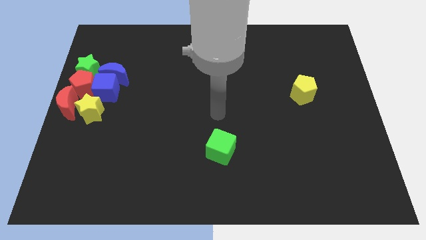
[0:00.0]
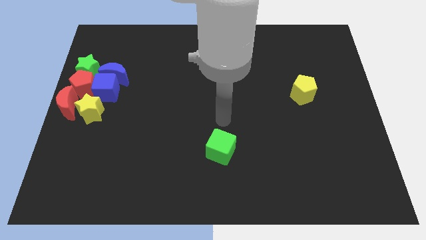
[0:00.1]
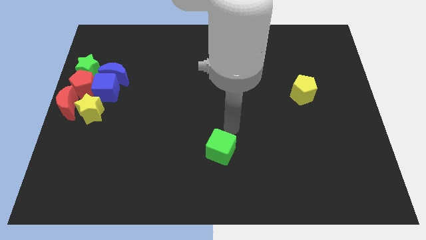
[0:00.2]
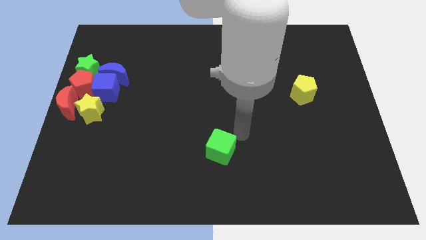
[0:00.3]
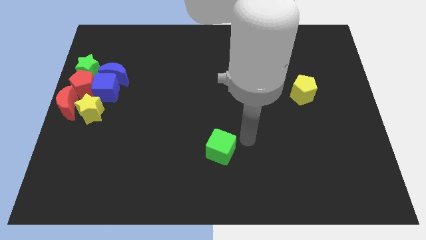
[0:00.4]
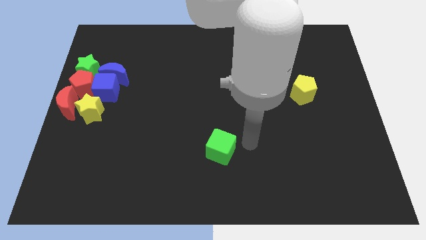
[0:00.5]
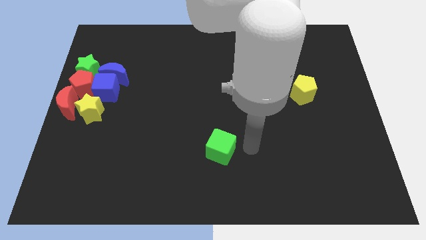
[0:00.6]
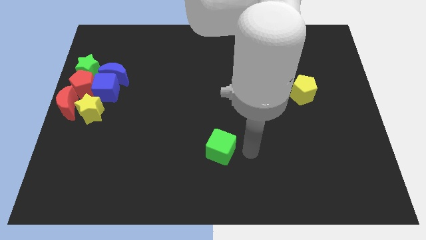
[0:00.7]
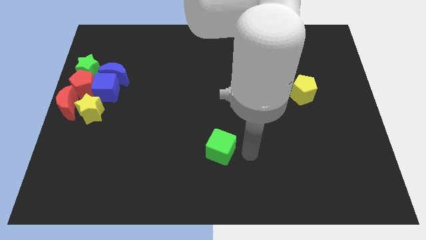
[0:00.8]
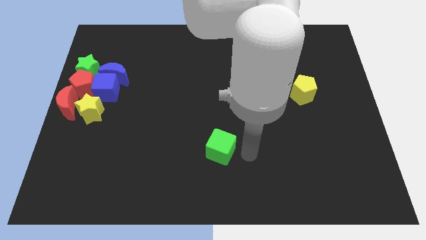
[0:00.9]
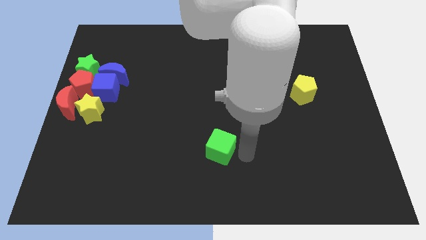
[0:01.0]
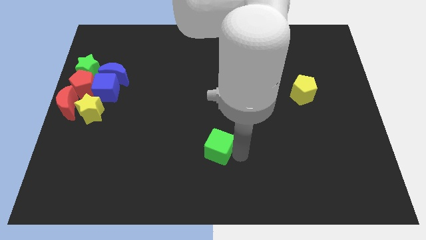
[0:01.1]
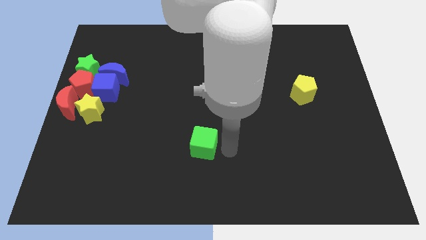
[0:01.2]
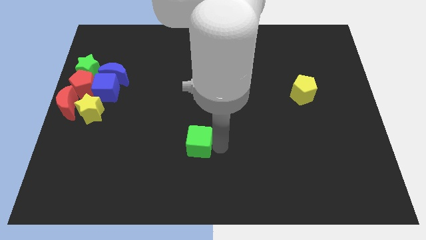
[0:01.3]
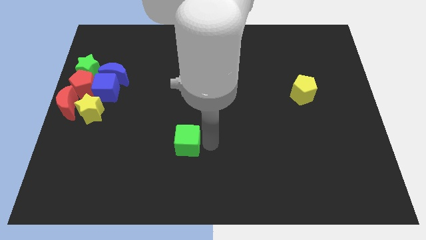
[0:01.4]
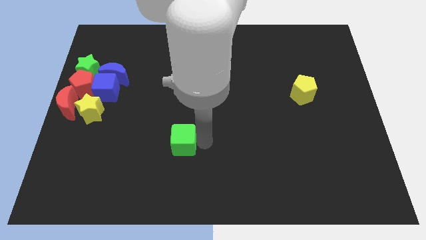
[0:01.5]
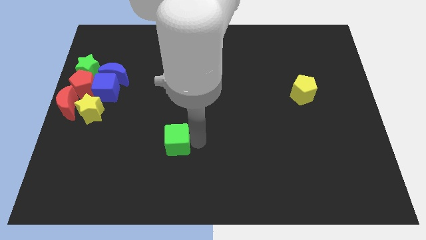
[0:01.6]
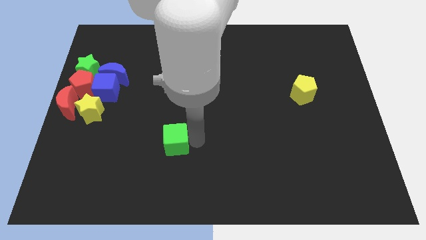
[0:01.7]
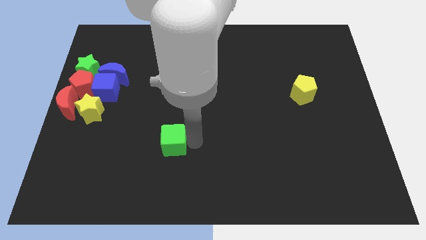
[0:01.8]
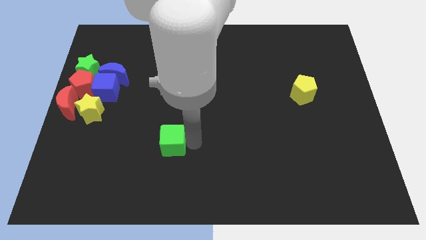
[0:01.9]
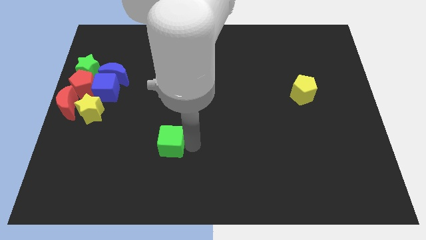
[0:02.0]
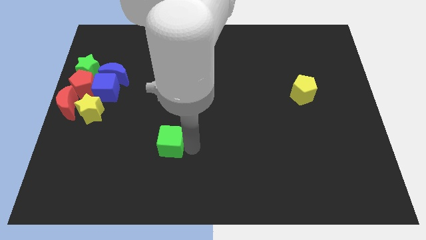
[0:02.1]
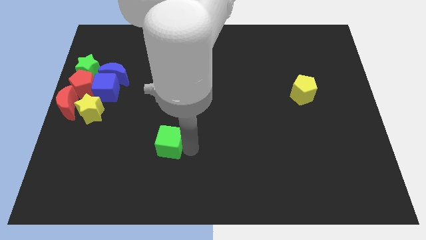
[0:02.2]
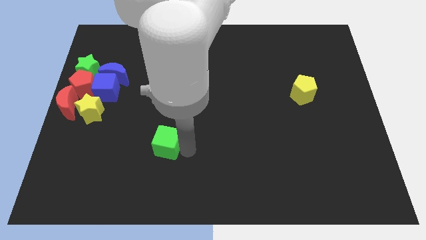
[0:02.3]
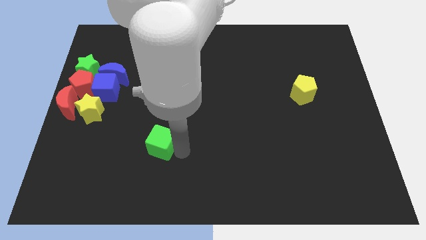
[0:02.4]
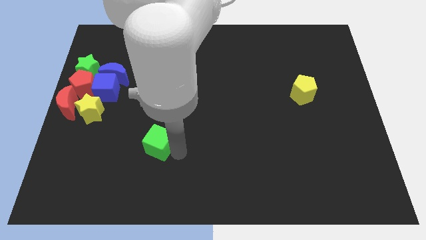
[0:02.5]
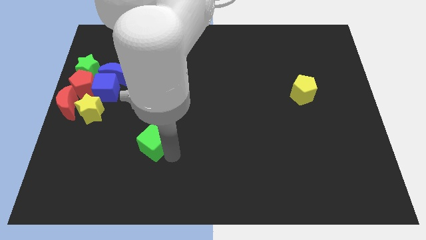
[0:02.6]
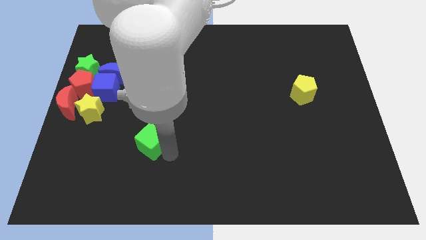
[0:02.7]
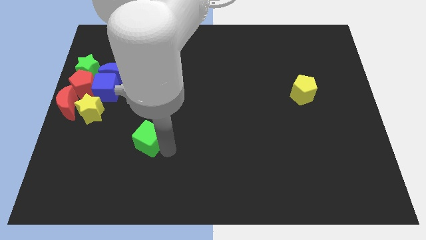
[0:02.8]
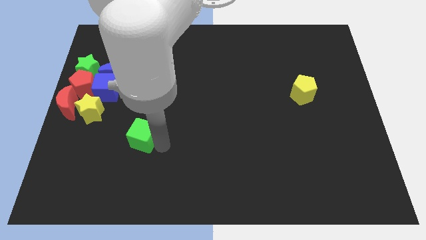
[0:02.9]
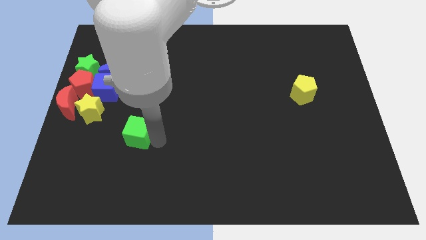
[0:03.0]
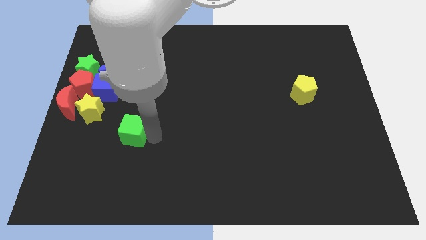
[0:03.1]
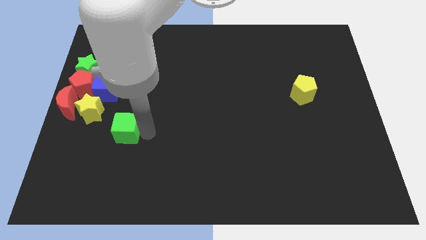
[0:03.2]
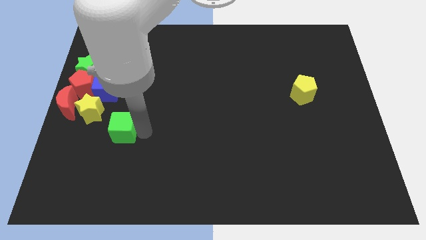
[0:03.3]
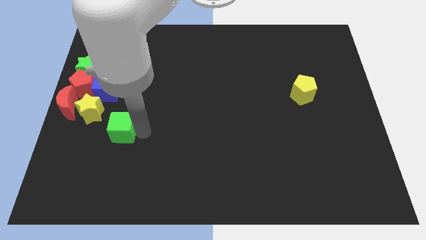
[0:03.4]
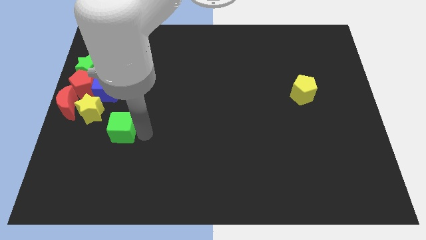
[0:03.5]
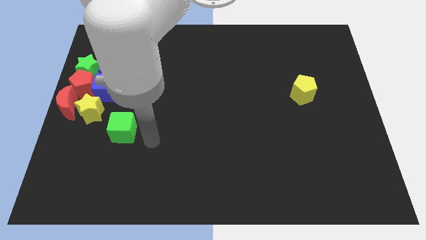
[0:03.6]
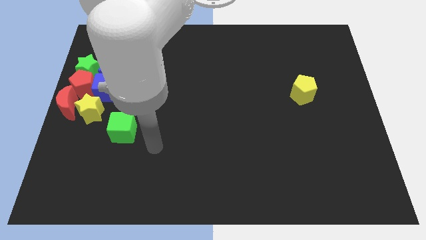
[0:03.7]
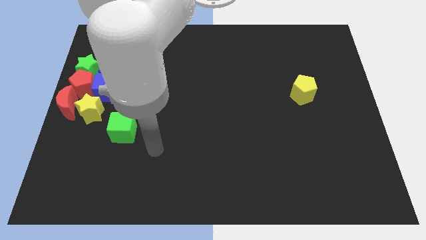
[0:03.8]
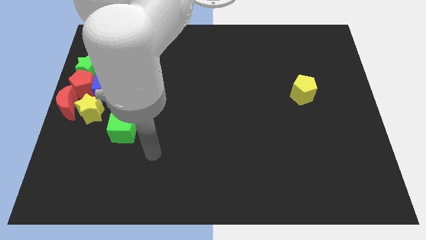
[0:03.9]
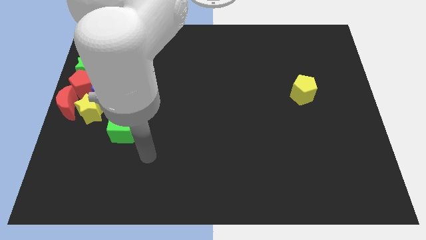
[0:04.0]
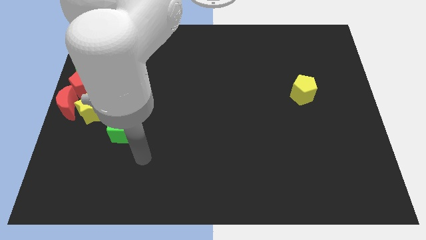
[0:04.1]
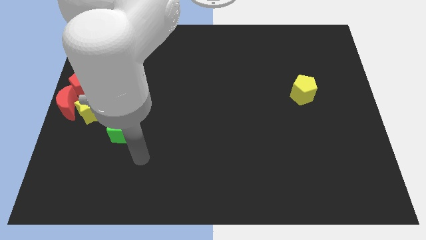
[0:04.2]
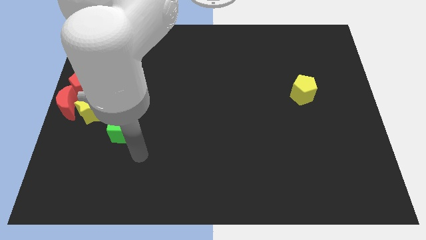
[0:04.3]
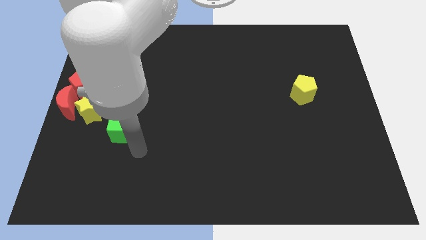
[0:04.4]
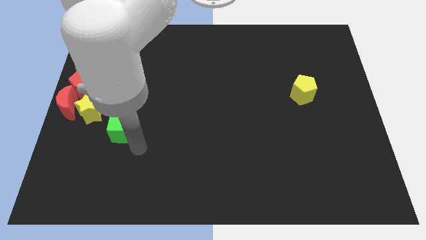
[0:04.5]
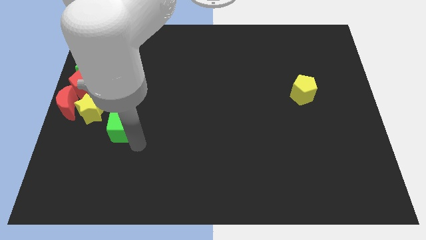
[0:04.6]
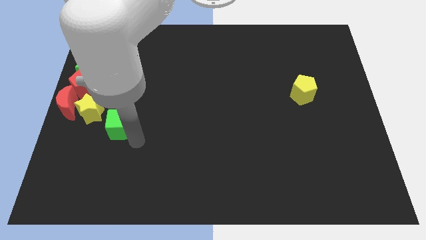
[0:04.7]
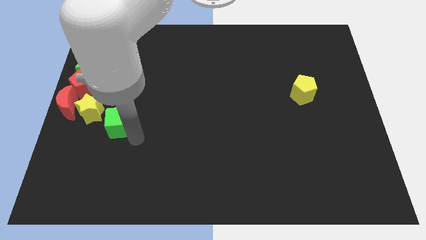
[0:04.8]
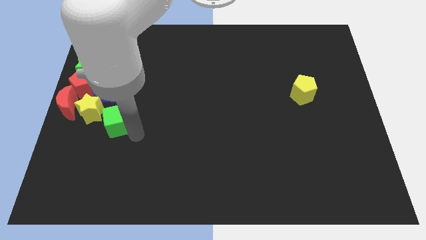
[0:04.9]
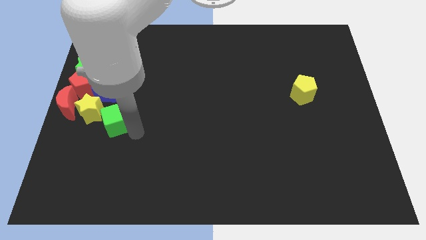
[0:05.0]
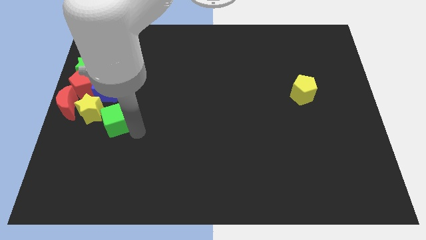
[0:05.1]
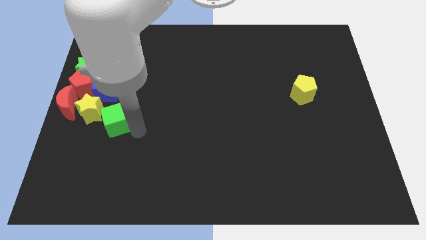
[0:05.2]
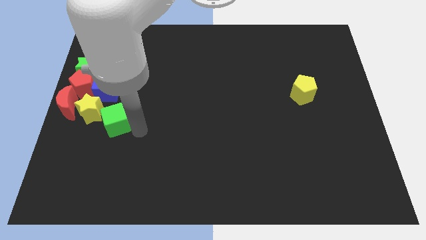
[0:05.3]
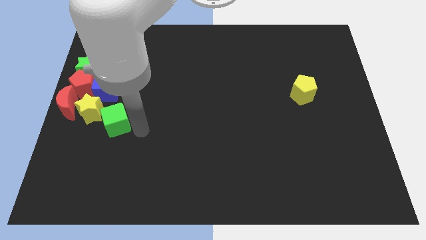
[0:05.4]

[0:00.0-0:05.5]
slide the green cube close to the yellow star

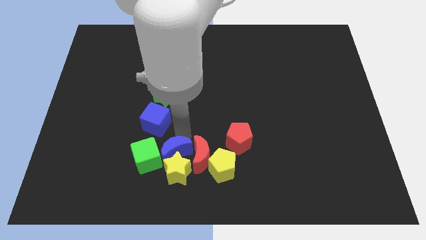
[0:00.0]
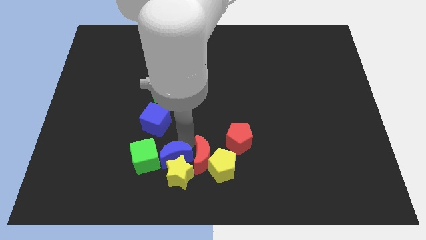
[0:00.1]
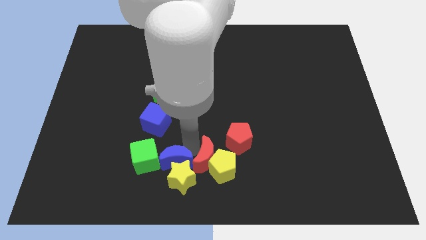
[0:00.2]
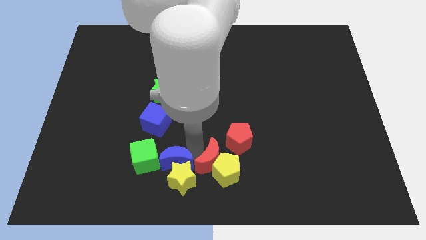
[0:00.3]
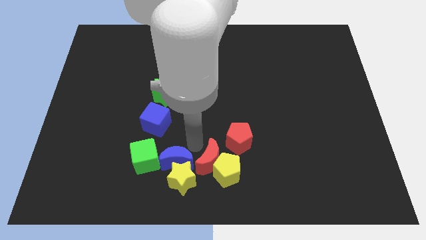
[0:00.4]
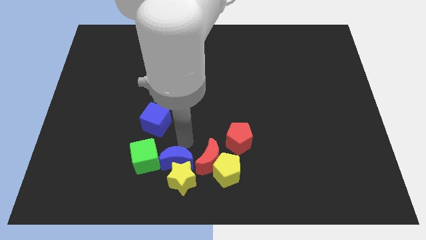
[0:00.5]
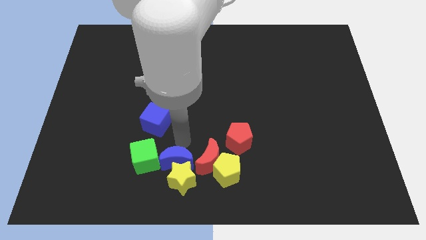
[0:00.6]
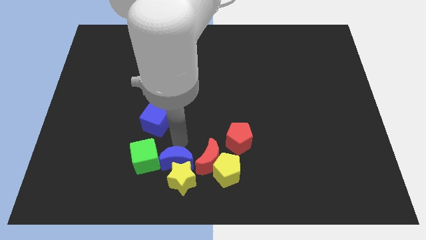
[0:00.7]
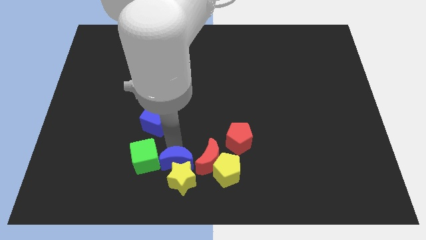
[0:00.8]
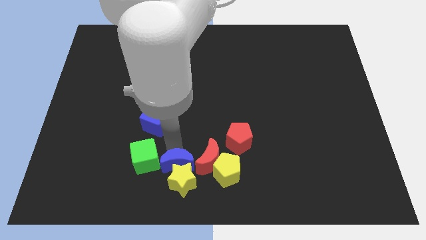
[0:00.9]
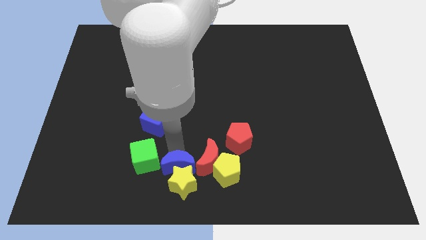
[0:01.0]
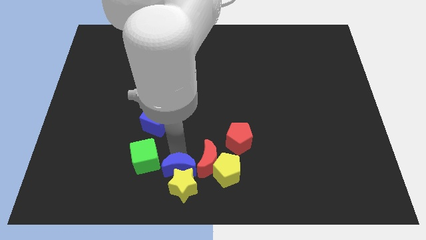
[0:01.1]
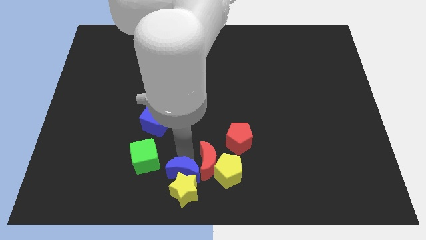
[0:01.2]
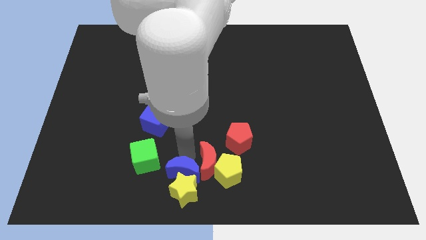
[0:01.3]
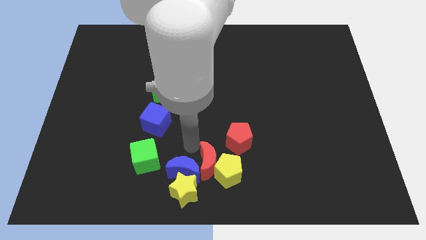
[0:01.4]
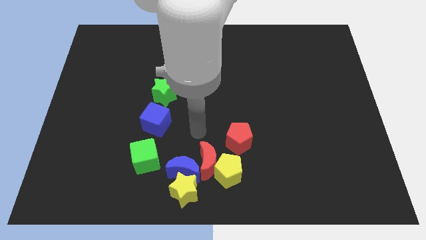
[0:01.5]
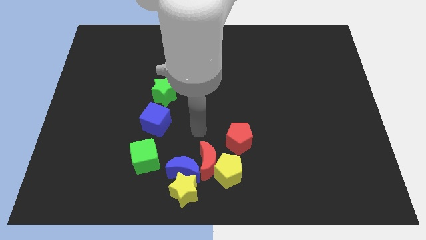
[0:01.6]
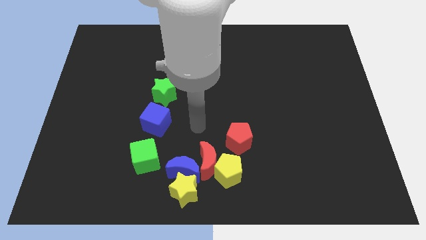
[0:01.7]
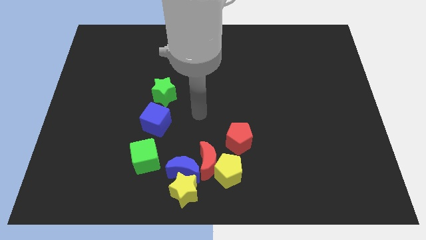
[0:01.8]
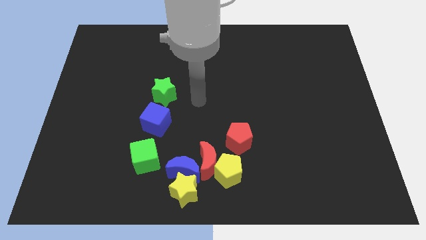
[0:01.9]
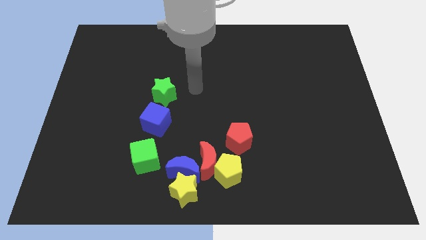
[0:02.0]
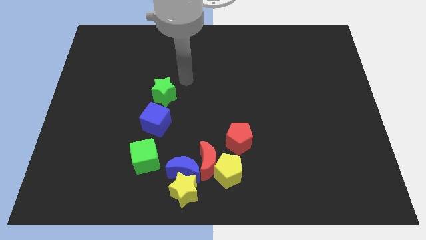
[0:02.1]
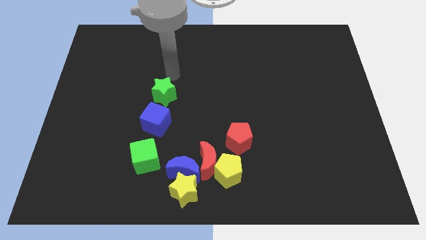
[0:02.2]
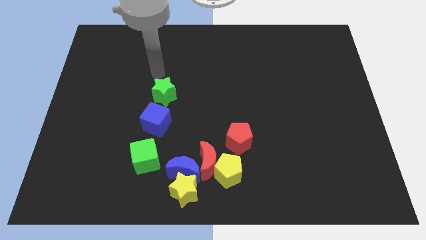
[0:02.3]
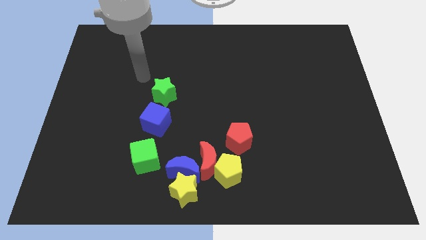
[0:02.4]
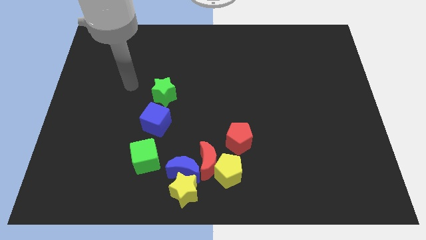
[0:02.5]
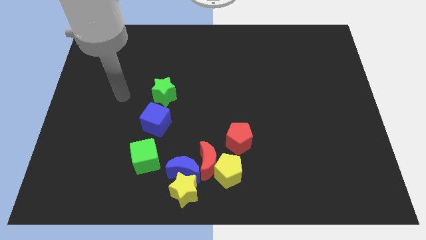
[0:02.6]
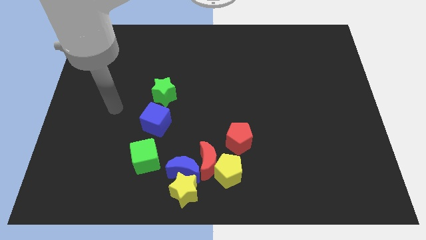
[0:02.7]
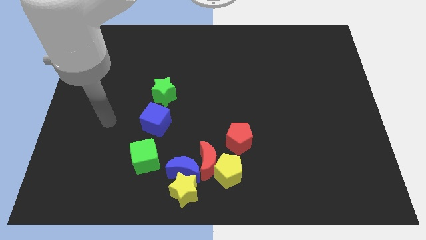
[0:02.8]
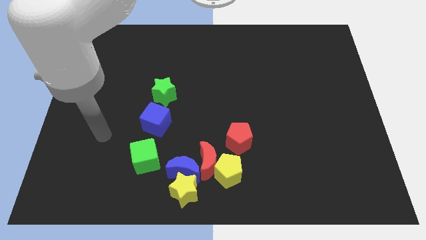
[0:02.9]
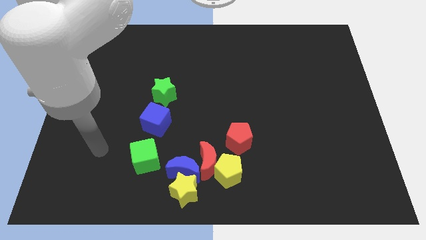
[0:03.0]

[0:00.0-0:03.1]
push the blue crescent and yellow star slightly towards the bottom and go away

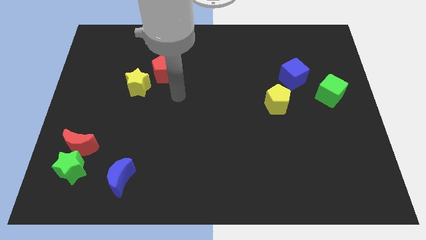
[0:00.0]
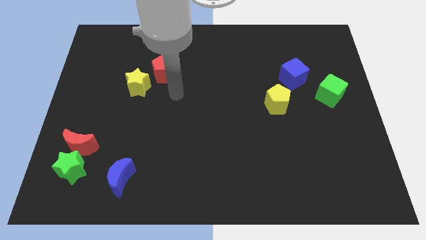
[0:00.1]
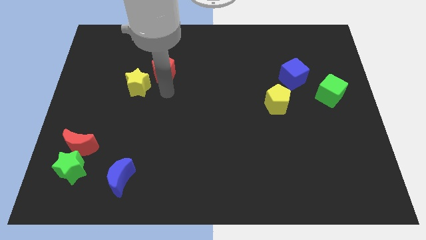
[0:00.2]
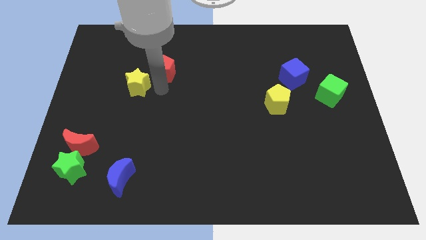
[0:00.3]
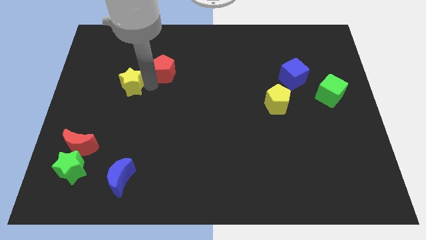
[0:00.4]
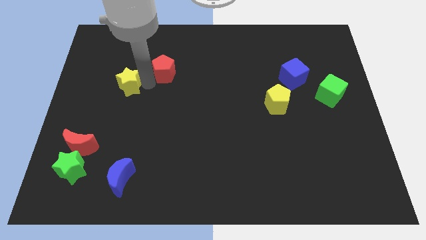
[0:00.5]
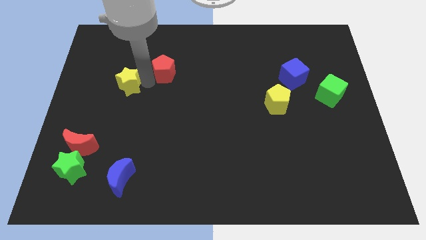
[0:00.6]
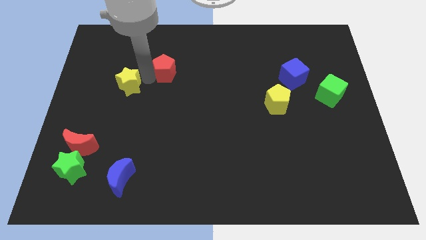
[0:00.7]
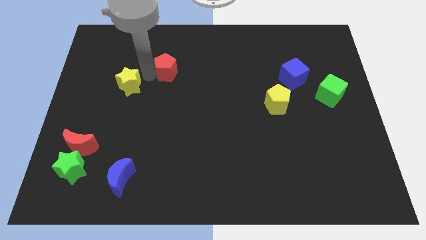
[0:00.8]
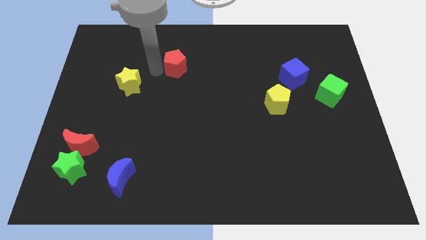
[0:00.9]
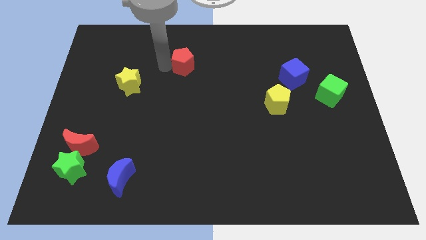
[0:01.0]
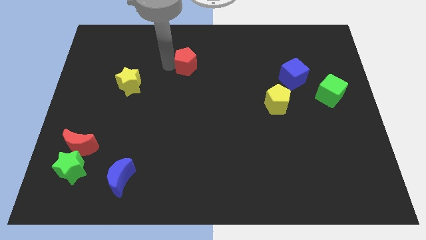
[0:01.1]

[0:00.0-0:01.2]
separate the yellow star and red pentagon to each other
